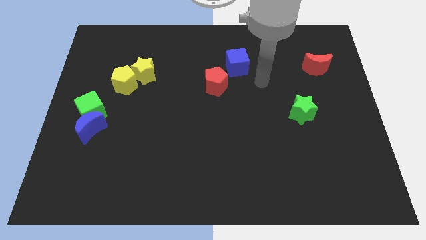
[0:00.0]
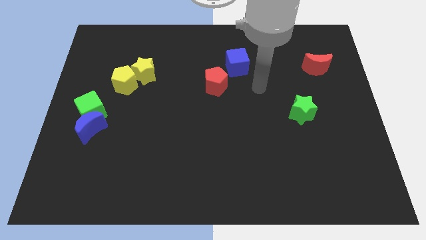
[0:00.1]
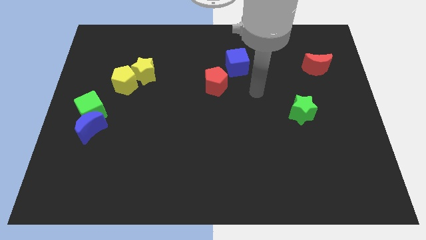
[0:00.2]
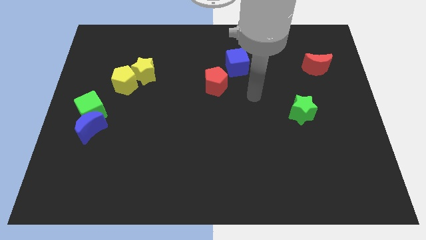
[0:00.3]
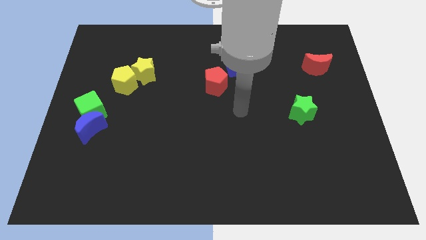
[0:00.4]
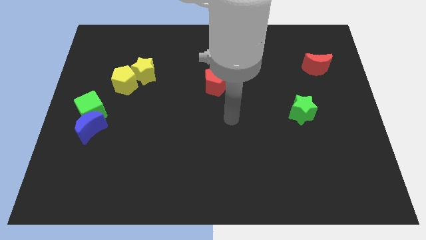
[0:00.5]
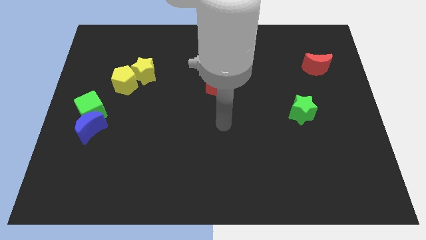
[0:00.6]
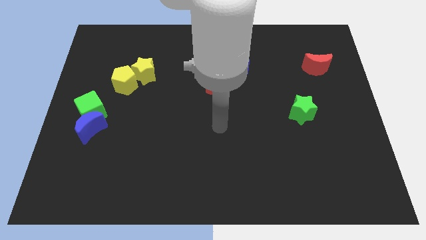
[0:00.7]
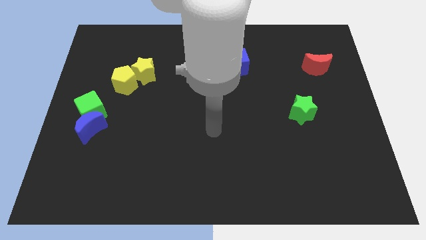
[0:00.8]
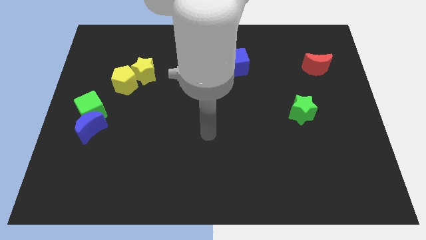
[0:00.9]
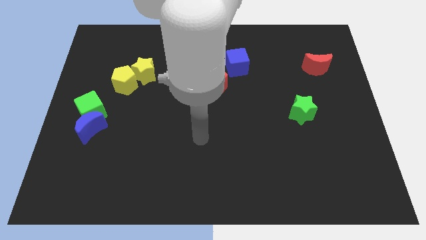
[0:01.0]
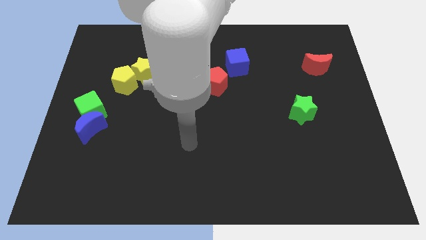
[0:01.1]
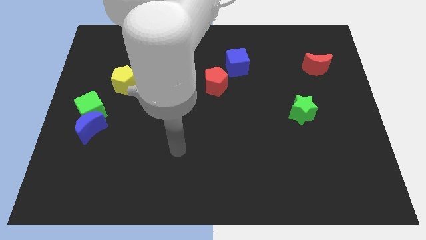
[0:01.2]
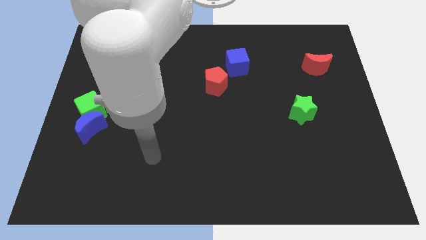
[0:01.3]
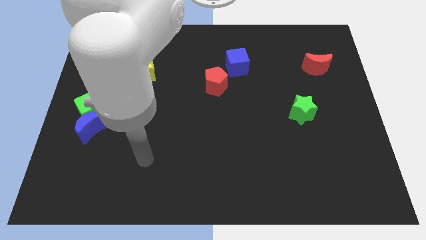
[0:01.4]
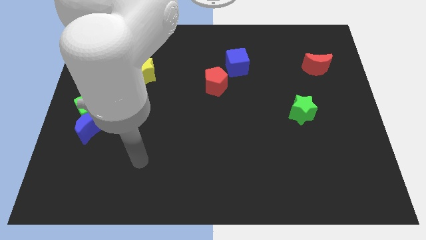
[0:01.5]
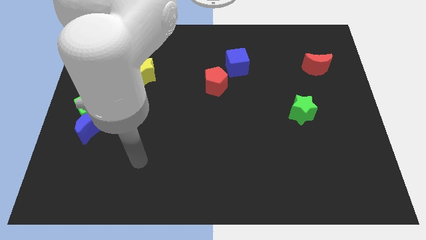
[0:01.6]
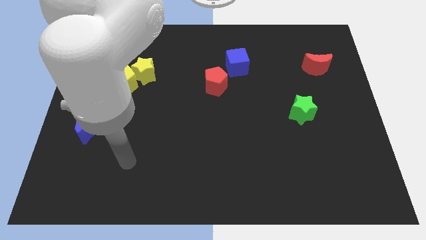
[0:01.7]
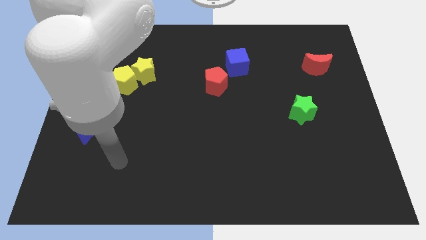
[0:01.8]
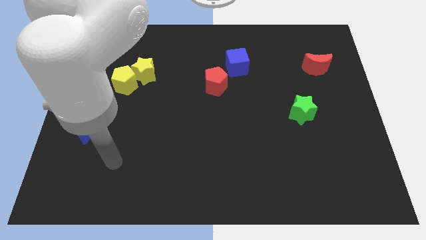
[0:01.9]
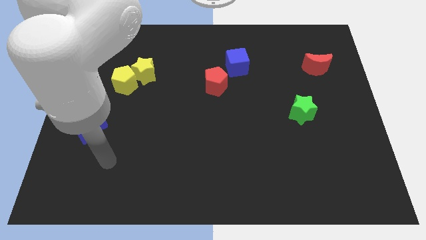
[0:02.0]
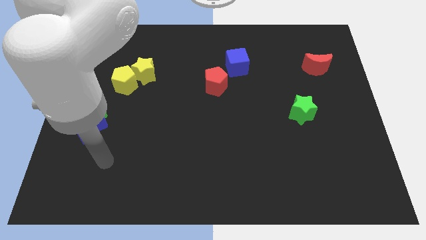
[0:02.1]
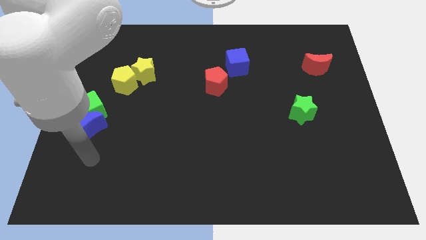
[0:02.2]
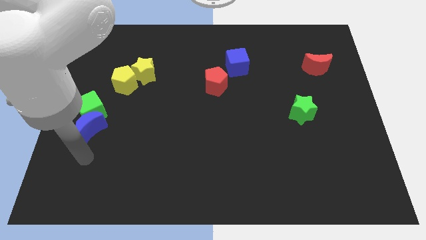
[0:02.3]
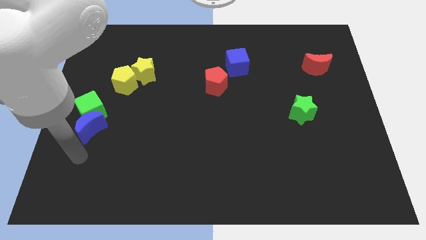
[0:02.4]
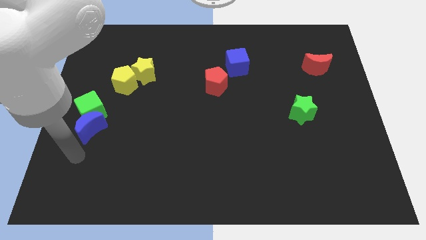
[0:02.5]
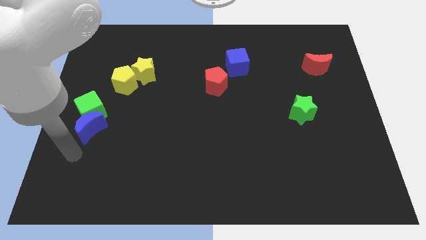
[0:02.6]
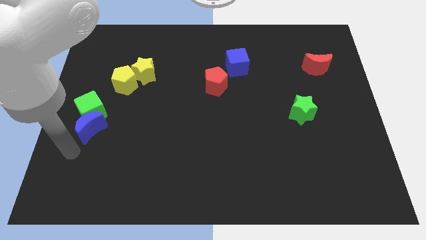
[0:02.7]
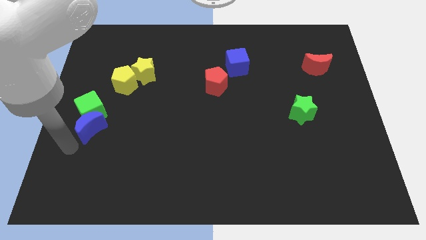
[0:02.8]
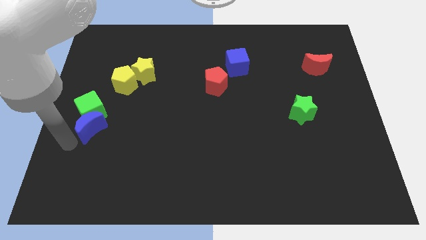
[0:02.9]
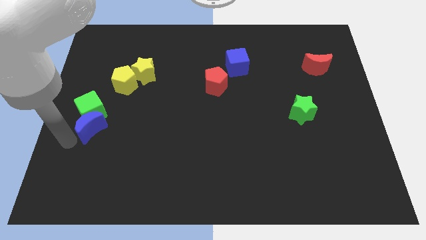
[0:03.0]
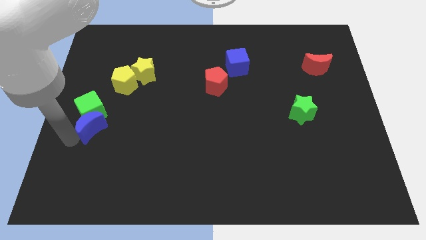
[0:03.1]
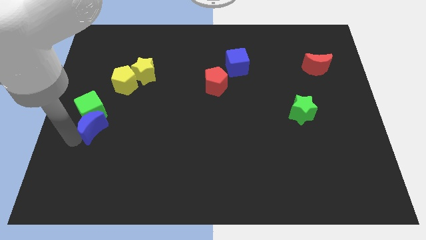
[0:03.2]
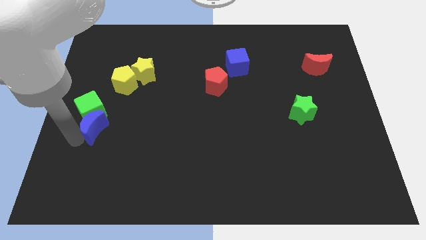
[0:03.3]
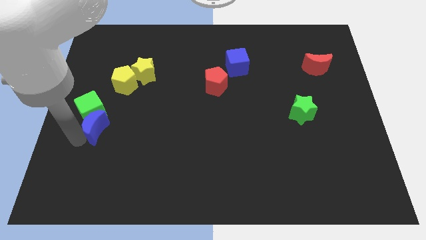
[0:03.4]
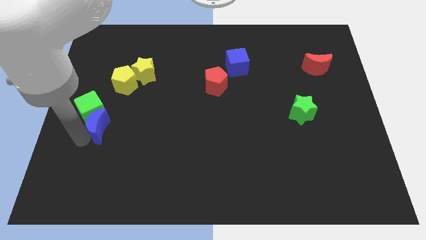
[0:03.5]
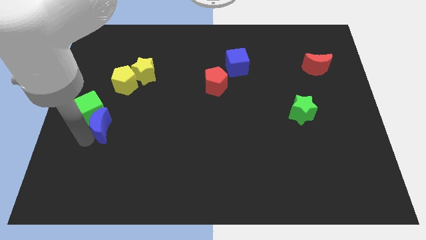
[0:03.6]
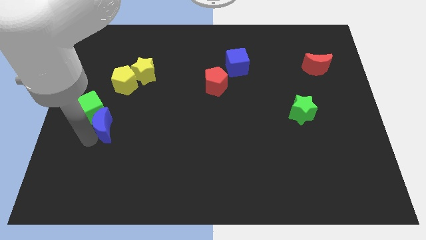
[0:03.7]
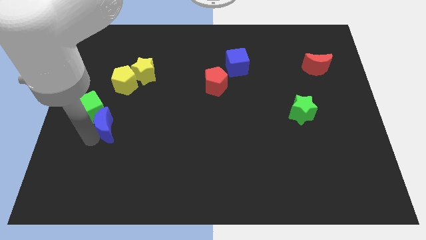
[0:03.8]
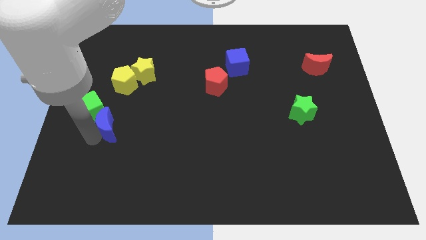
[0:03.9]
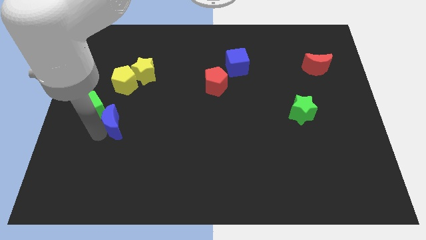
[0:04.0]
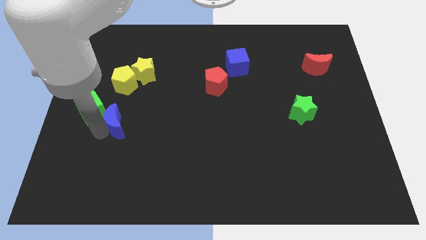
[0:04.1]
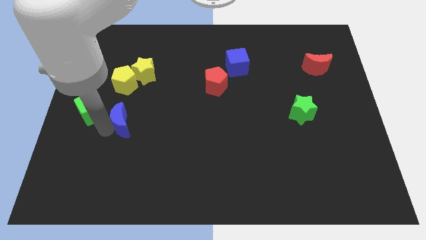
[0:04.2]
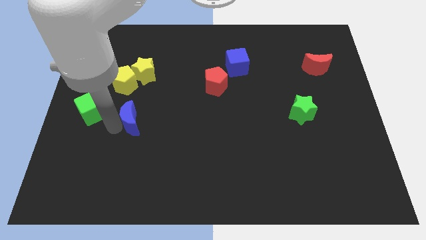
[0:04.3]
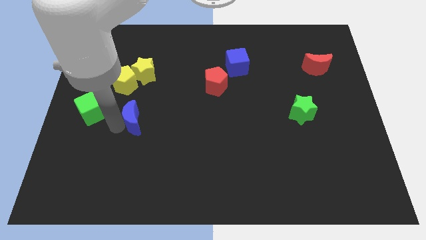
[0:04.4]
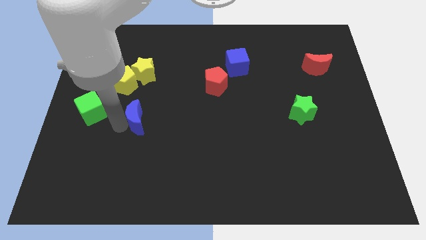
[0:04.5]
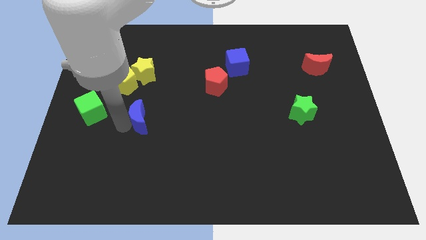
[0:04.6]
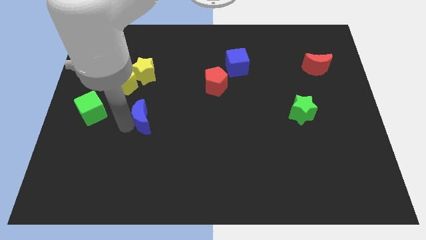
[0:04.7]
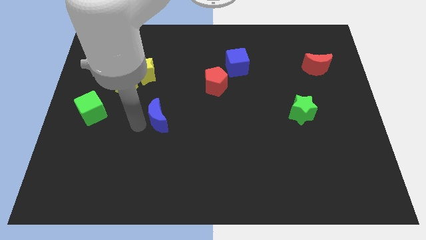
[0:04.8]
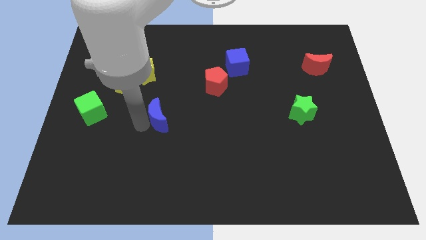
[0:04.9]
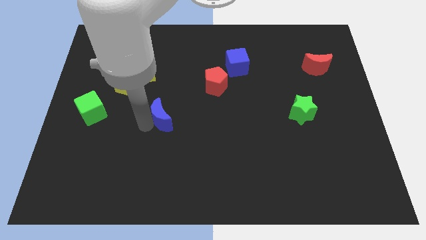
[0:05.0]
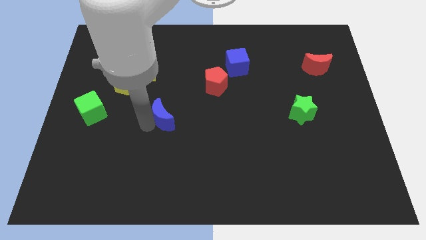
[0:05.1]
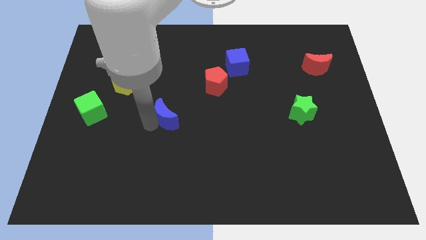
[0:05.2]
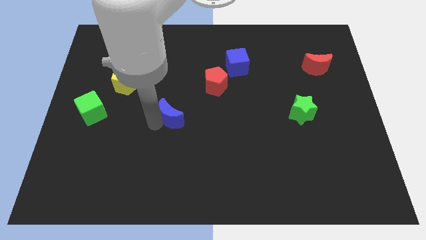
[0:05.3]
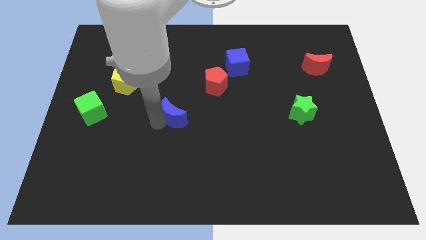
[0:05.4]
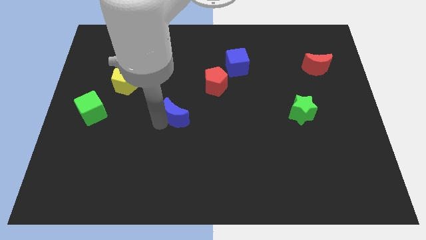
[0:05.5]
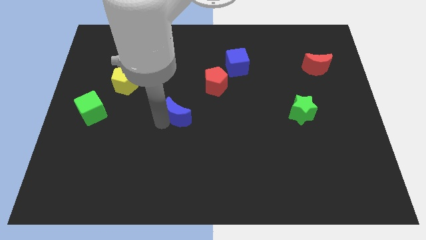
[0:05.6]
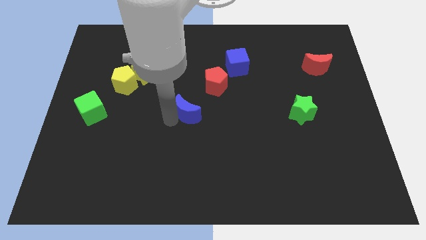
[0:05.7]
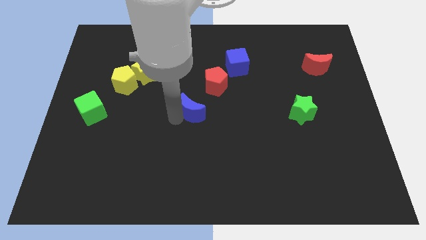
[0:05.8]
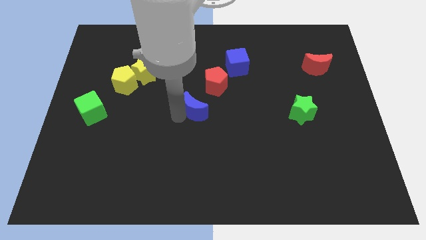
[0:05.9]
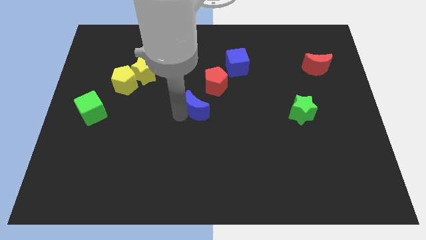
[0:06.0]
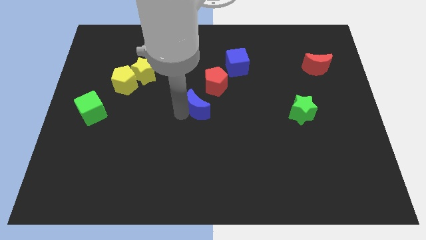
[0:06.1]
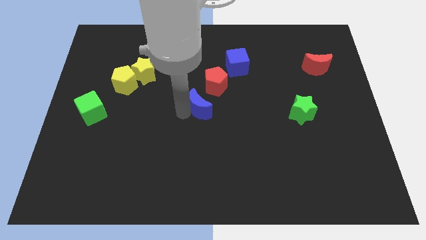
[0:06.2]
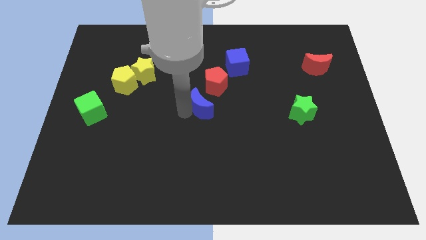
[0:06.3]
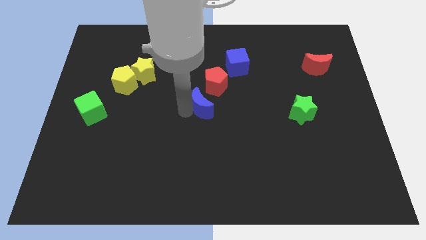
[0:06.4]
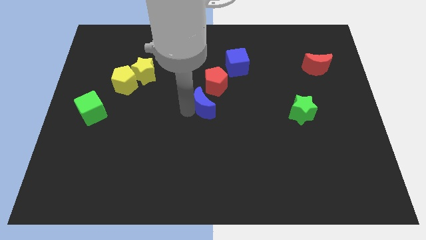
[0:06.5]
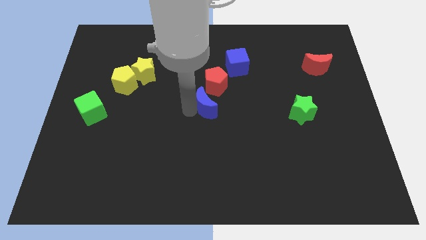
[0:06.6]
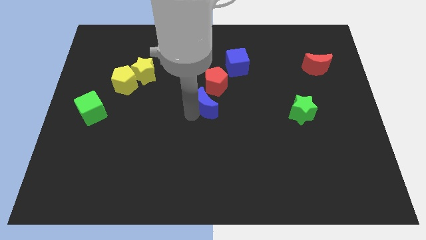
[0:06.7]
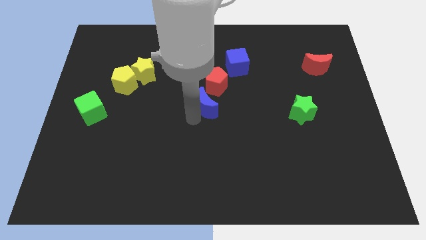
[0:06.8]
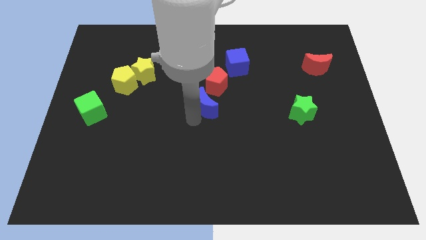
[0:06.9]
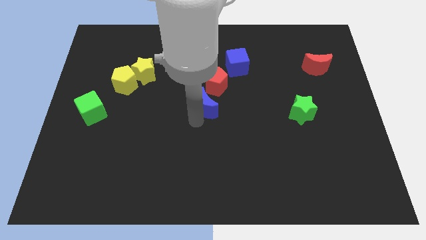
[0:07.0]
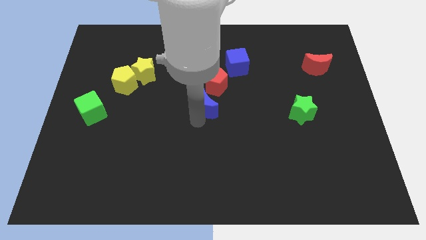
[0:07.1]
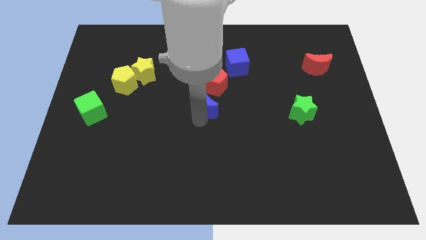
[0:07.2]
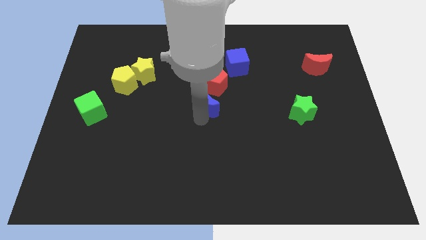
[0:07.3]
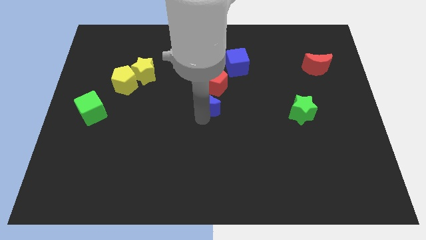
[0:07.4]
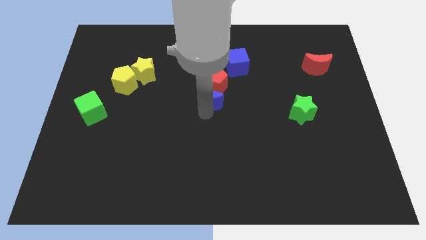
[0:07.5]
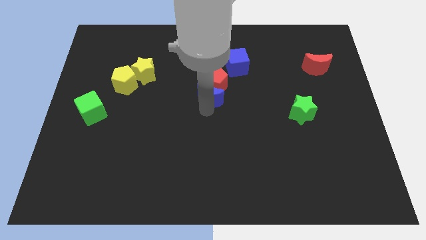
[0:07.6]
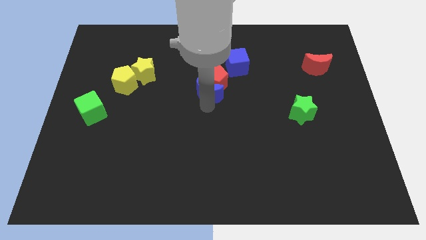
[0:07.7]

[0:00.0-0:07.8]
move the blue moon towards the red pentagon
